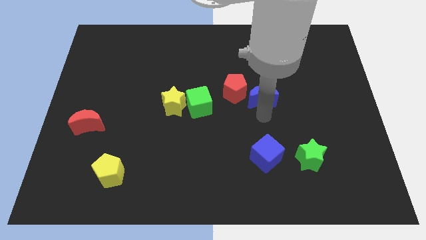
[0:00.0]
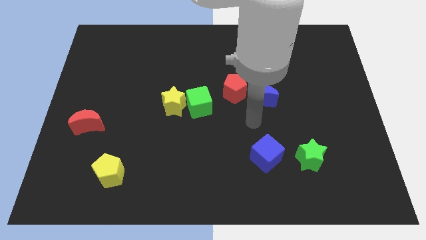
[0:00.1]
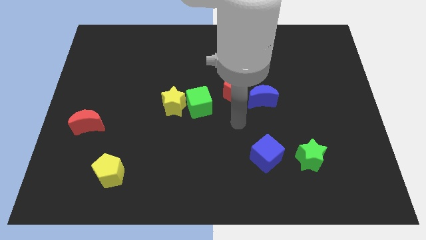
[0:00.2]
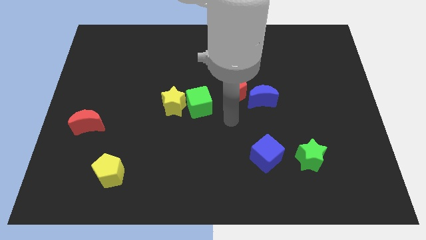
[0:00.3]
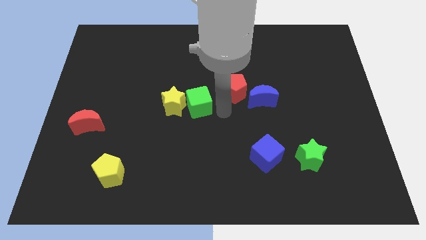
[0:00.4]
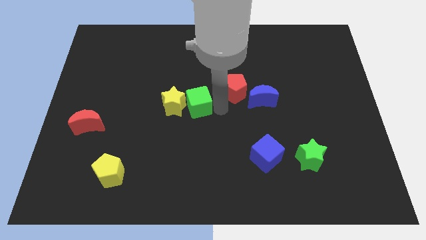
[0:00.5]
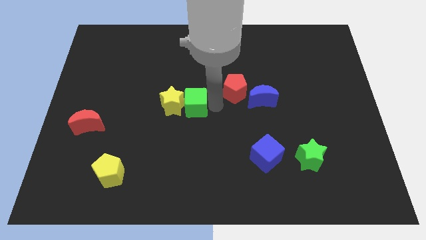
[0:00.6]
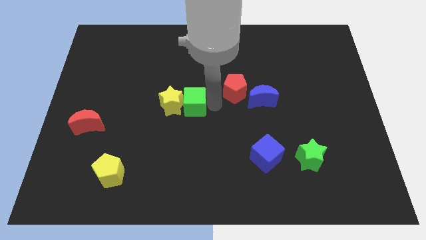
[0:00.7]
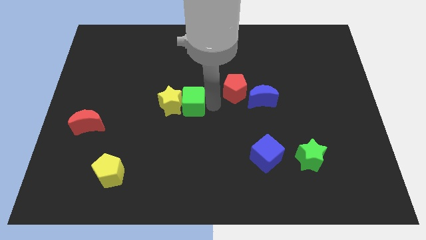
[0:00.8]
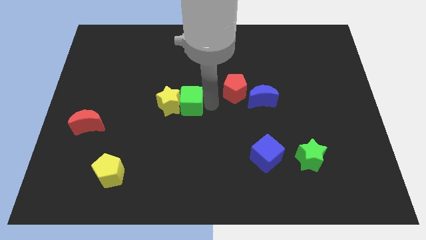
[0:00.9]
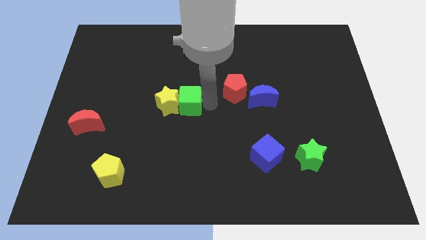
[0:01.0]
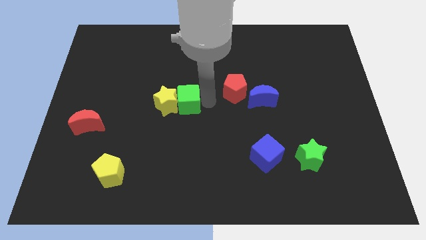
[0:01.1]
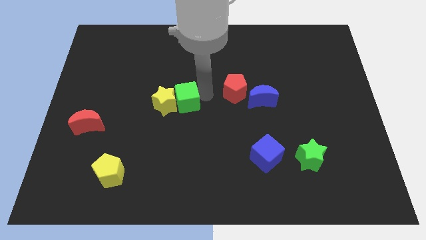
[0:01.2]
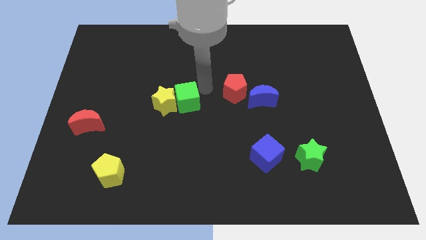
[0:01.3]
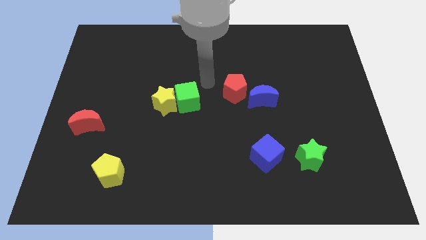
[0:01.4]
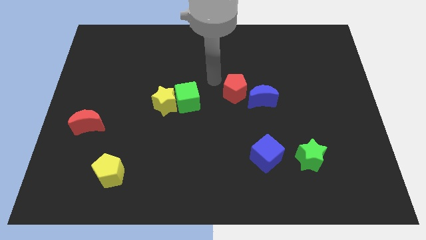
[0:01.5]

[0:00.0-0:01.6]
push the green cube slightly away from the red pentagon

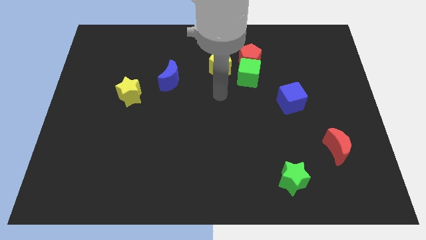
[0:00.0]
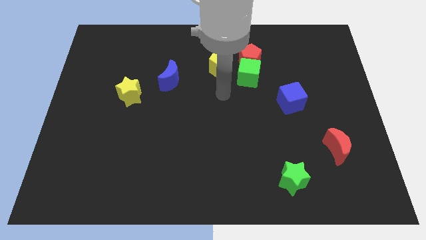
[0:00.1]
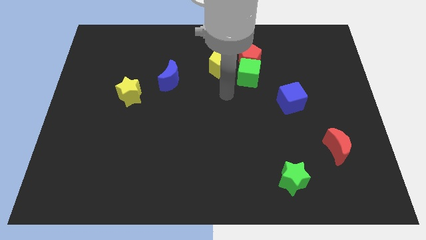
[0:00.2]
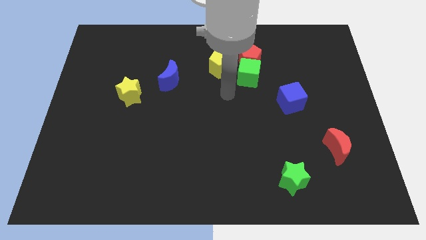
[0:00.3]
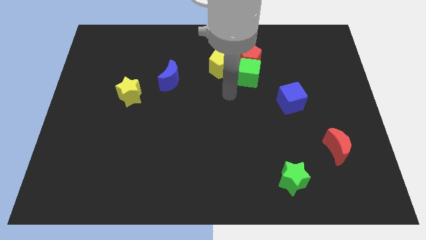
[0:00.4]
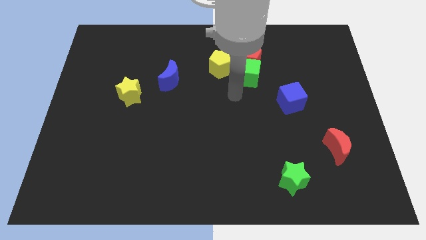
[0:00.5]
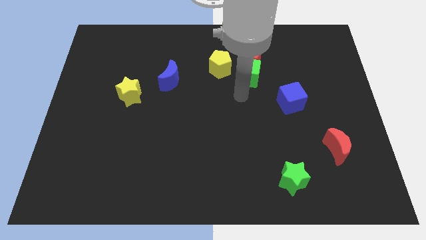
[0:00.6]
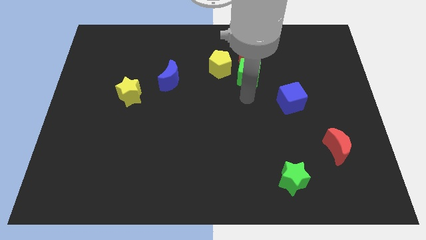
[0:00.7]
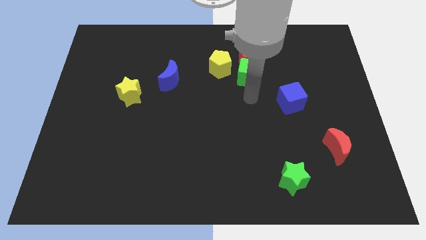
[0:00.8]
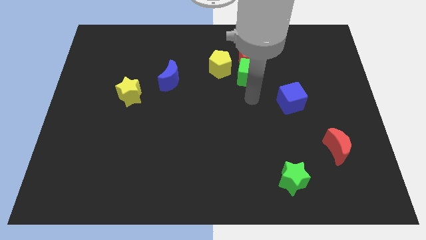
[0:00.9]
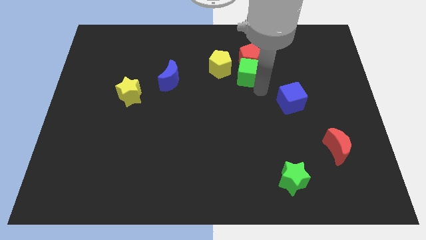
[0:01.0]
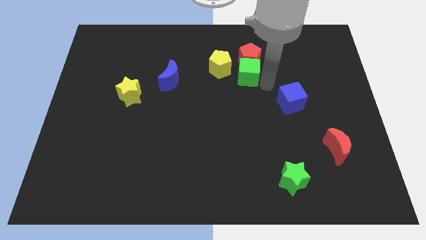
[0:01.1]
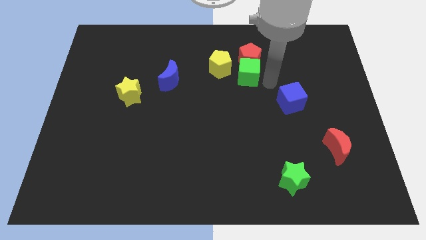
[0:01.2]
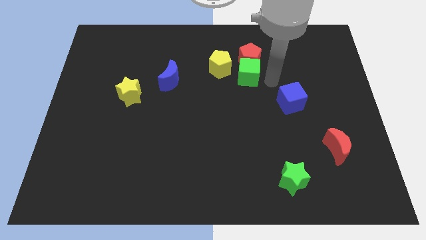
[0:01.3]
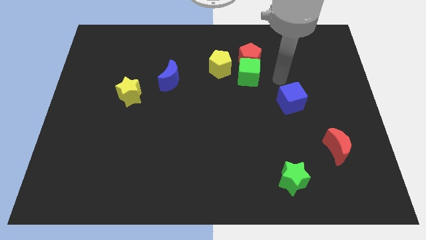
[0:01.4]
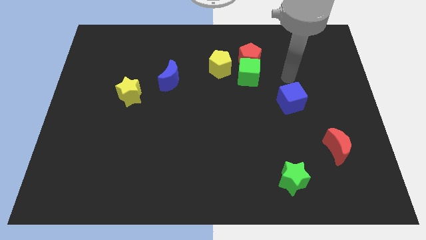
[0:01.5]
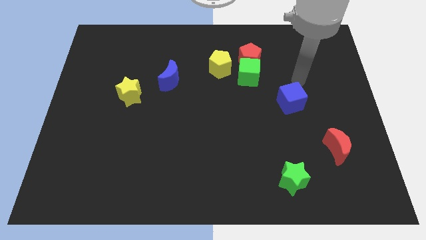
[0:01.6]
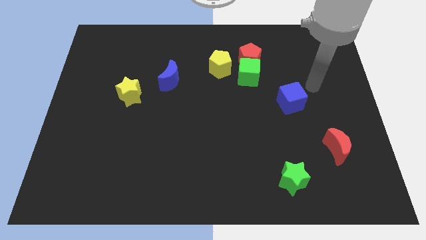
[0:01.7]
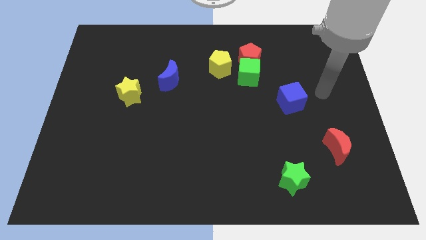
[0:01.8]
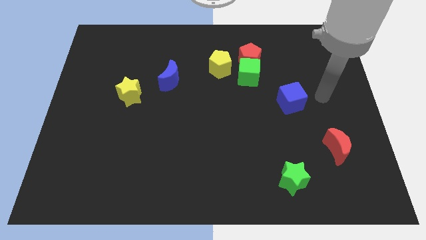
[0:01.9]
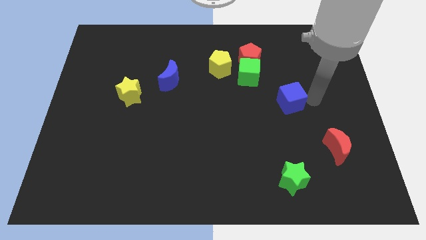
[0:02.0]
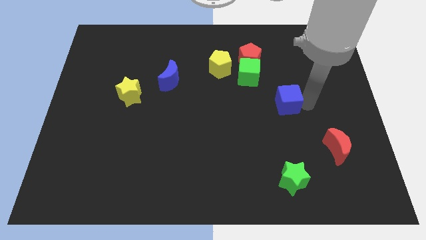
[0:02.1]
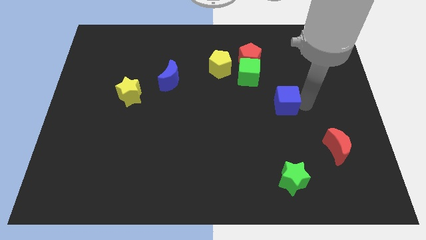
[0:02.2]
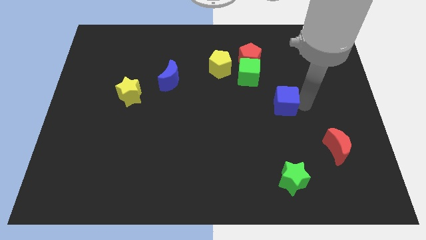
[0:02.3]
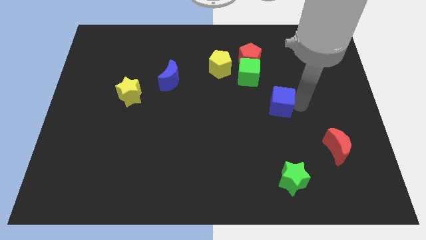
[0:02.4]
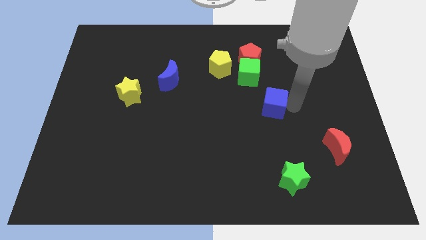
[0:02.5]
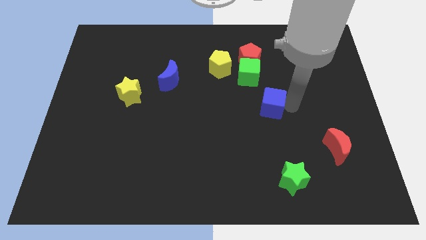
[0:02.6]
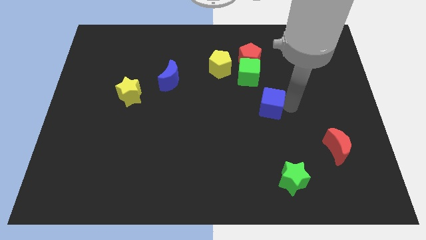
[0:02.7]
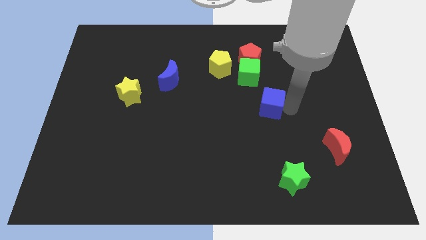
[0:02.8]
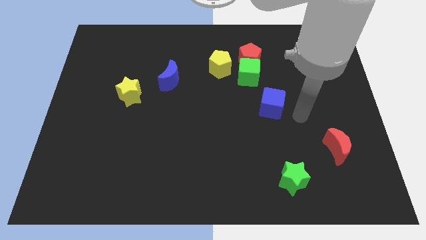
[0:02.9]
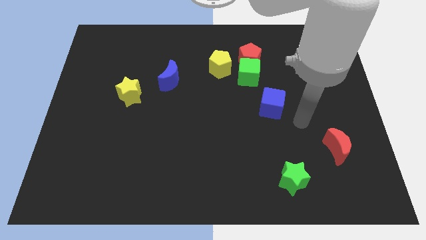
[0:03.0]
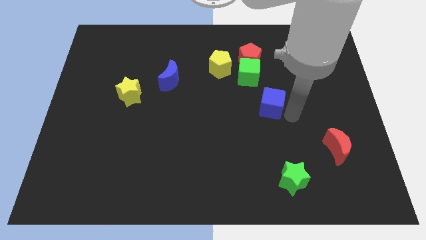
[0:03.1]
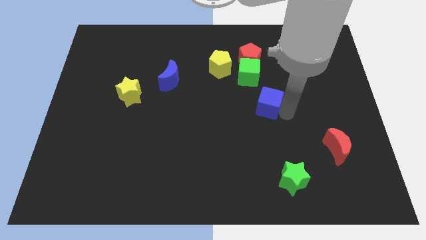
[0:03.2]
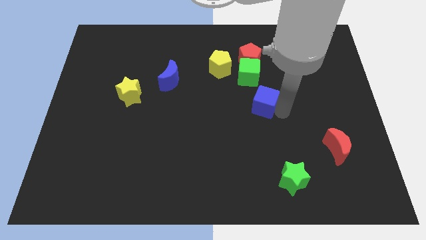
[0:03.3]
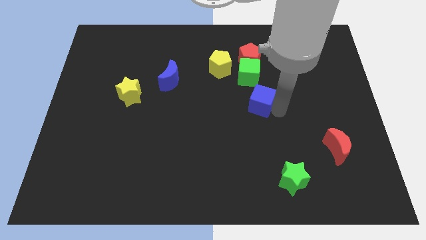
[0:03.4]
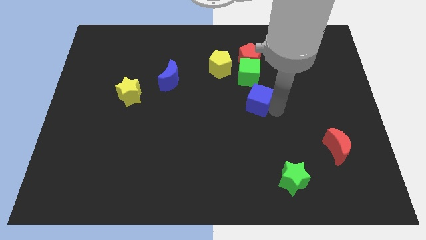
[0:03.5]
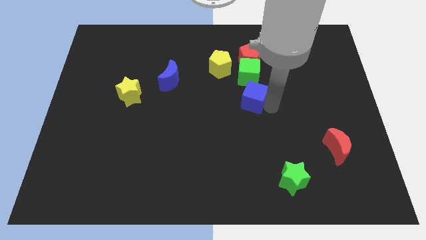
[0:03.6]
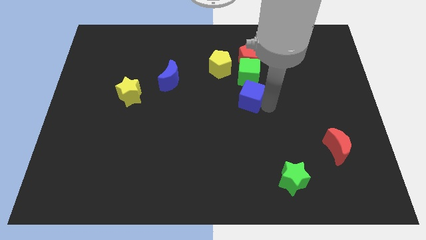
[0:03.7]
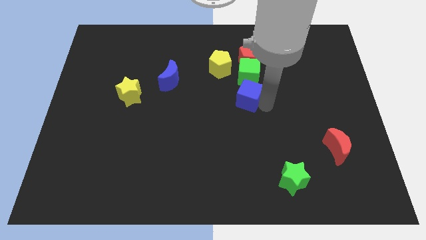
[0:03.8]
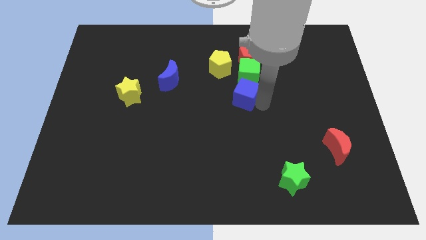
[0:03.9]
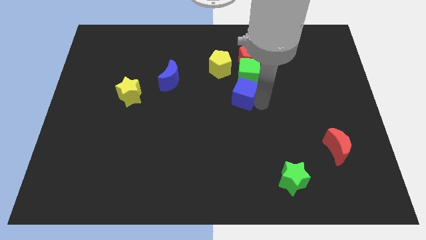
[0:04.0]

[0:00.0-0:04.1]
place the blue cube below the green cube

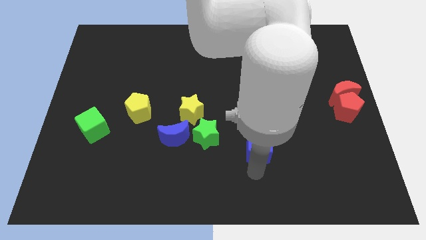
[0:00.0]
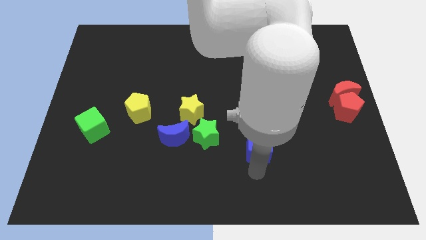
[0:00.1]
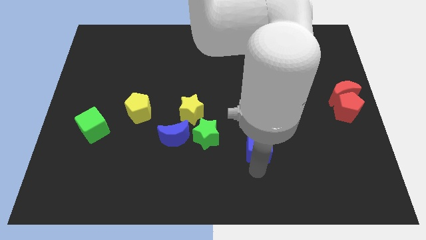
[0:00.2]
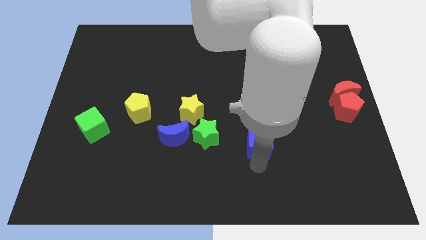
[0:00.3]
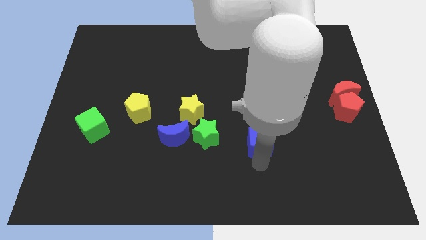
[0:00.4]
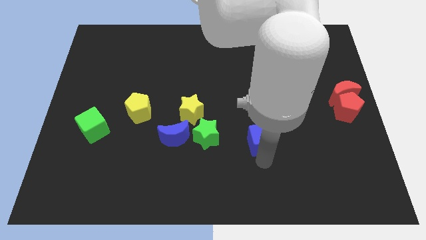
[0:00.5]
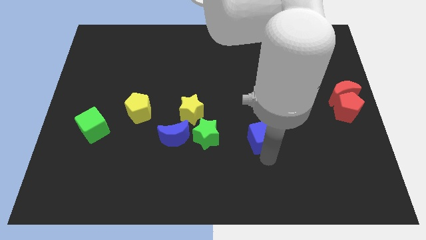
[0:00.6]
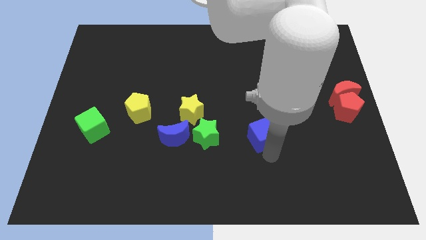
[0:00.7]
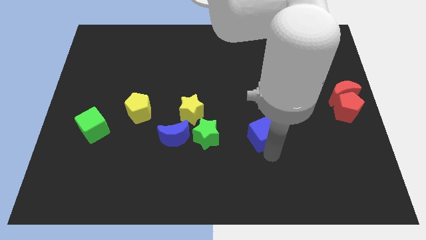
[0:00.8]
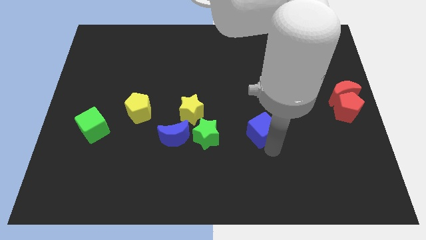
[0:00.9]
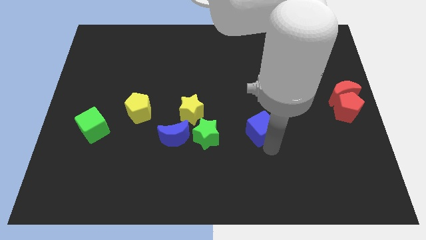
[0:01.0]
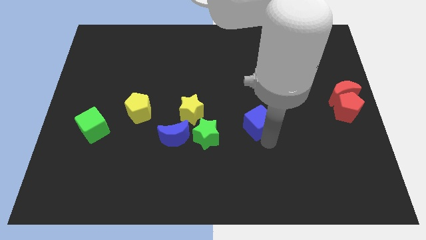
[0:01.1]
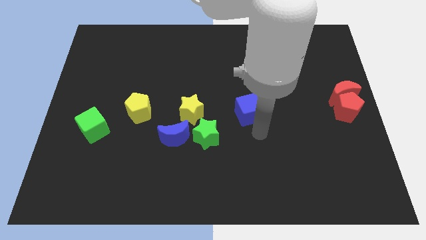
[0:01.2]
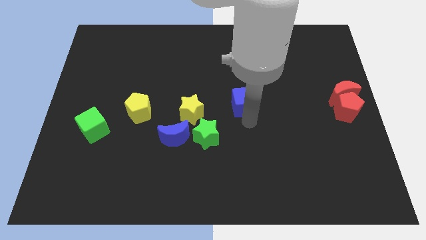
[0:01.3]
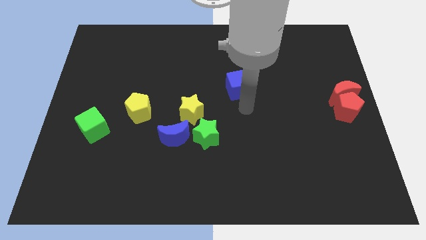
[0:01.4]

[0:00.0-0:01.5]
place blue cube to the center of the board

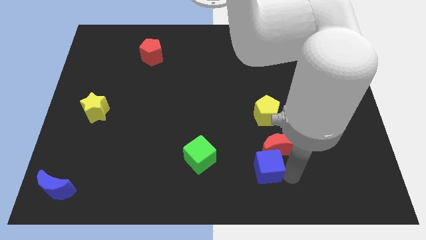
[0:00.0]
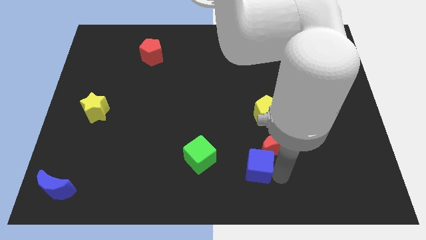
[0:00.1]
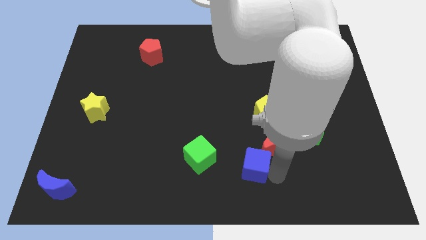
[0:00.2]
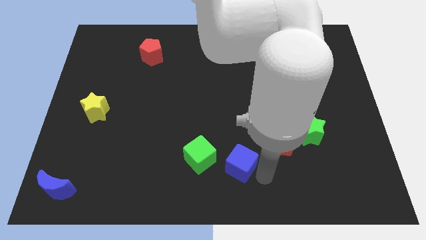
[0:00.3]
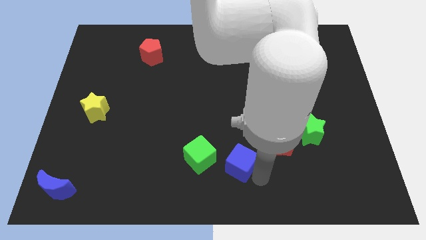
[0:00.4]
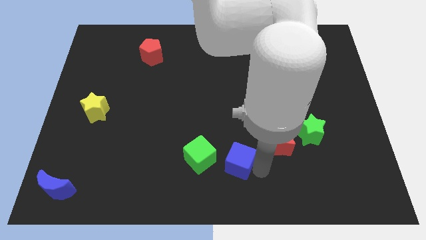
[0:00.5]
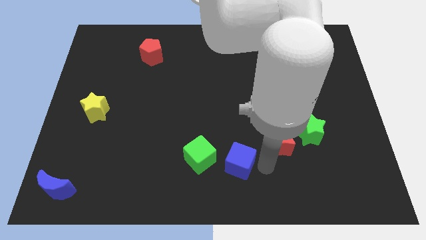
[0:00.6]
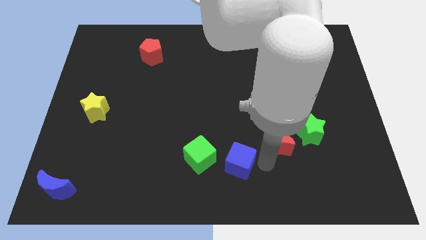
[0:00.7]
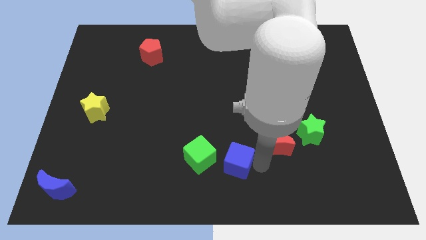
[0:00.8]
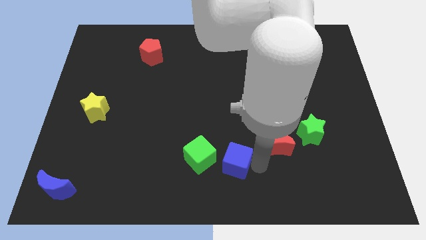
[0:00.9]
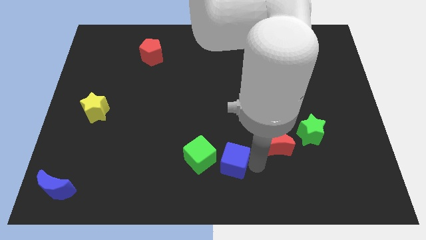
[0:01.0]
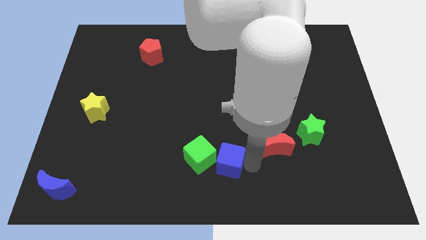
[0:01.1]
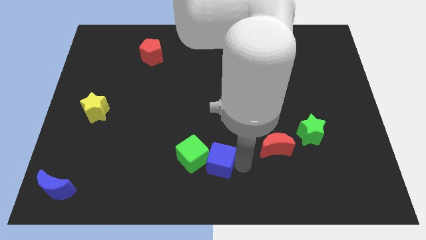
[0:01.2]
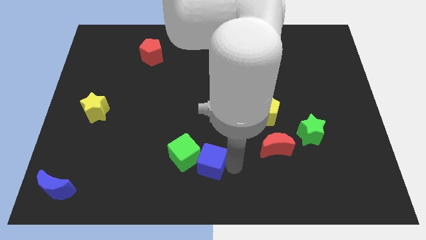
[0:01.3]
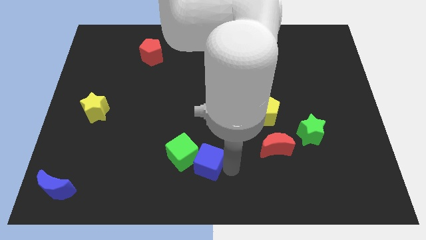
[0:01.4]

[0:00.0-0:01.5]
push the blue cube towards the green cube

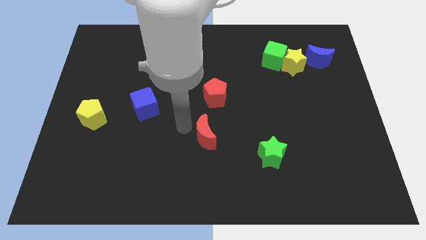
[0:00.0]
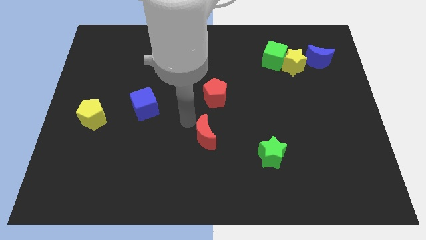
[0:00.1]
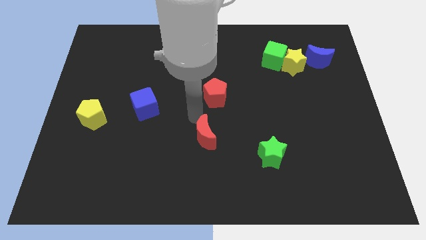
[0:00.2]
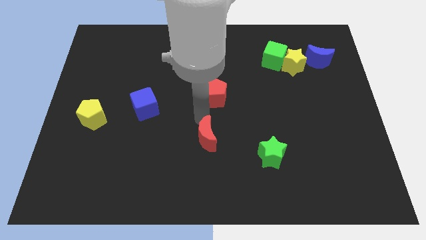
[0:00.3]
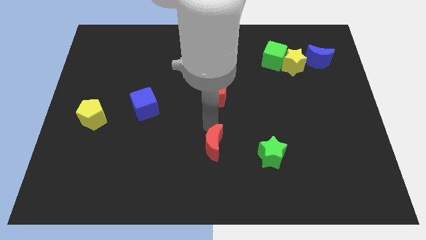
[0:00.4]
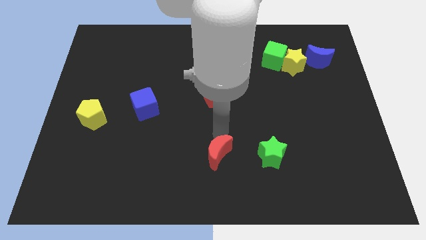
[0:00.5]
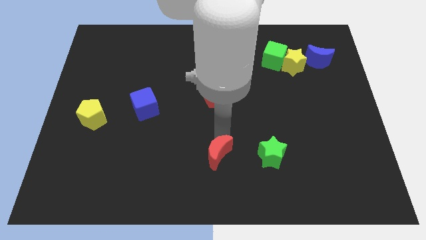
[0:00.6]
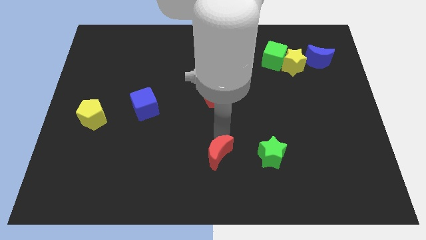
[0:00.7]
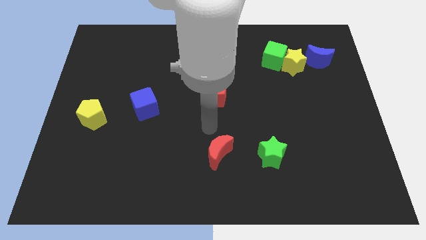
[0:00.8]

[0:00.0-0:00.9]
place red moon parallel left to green star
